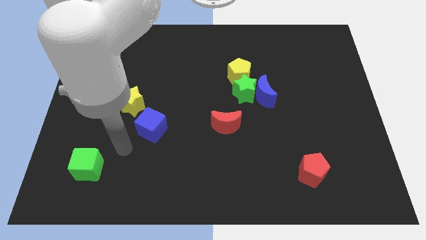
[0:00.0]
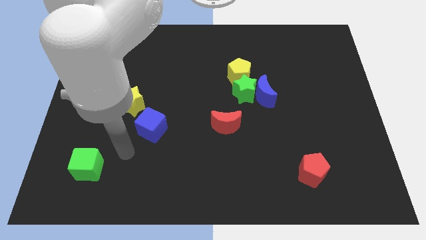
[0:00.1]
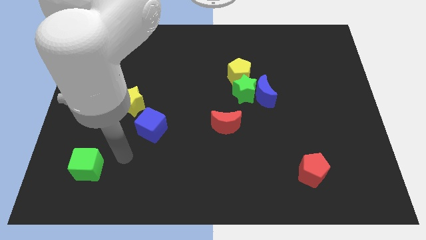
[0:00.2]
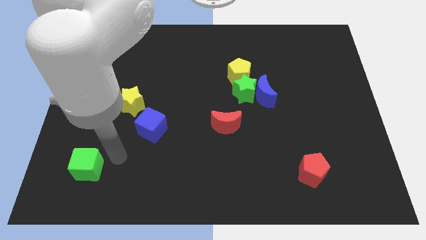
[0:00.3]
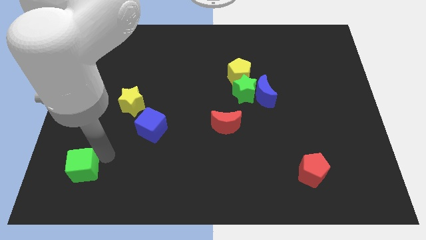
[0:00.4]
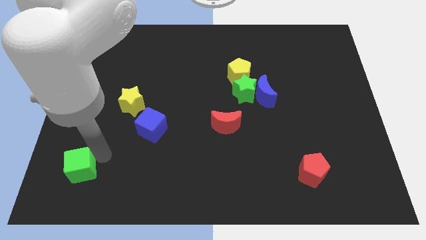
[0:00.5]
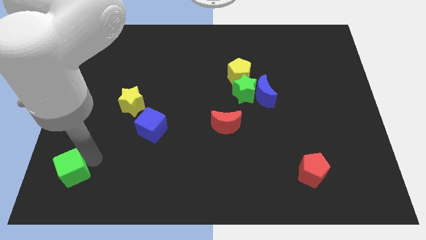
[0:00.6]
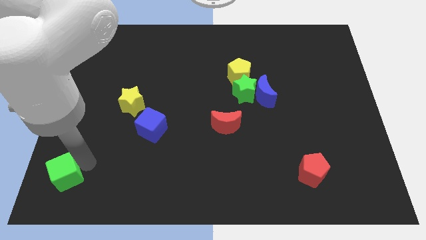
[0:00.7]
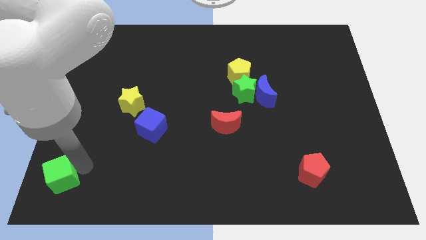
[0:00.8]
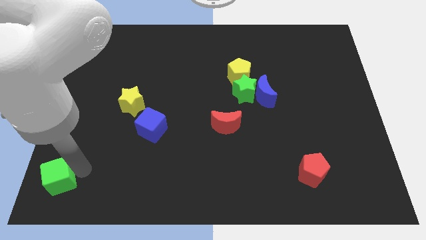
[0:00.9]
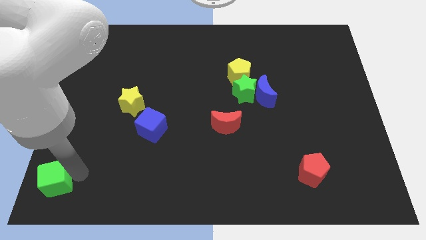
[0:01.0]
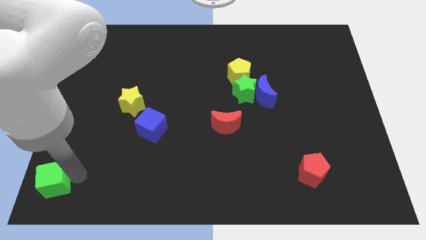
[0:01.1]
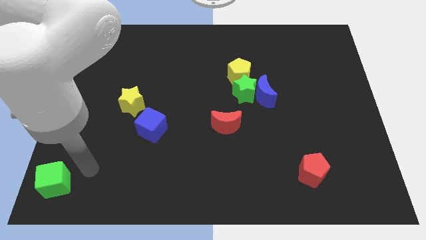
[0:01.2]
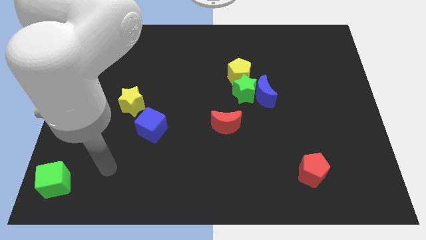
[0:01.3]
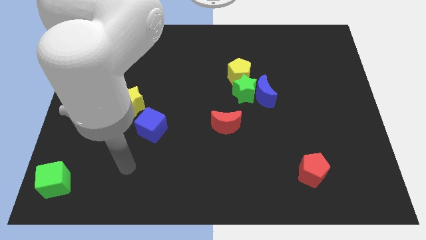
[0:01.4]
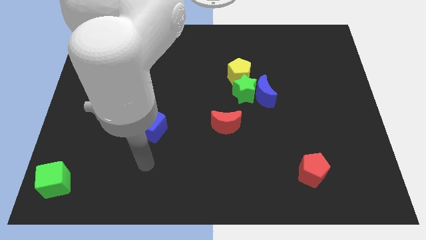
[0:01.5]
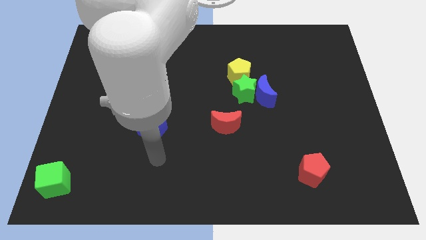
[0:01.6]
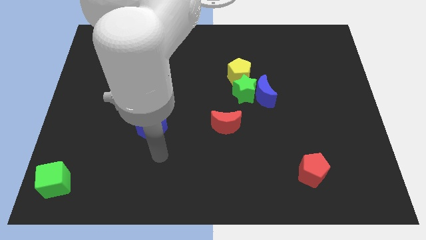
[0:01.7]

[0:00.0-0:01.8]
push the green cube to the bottom left of the board

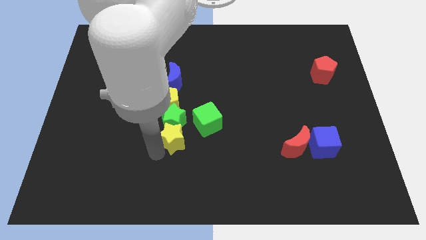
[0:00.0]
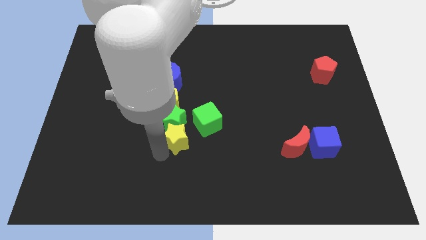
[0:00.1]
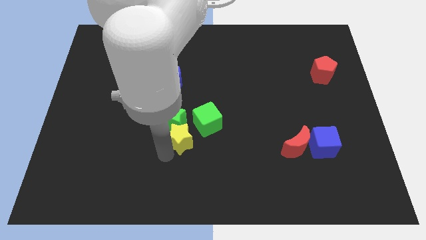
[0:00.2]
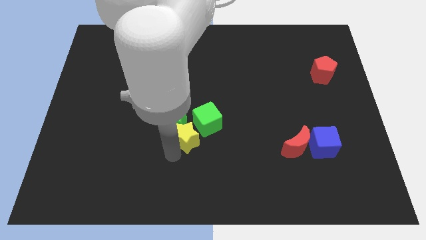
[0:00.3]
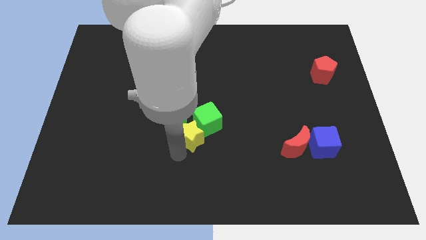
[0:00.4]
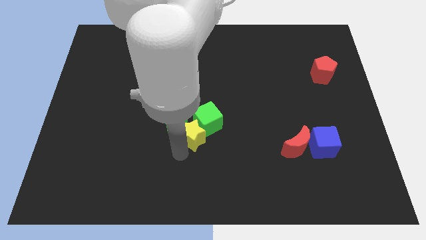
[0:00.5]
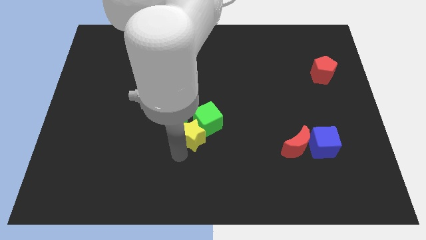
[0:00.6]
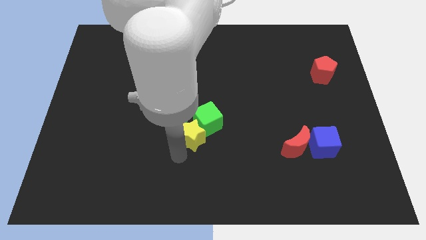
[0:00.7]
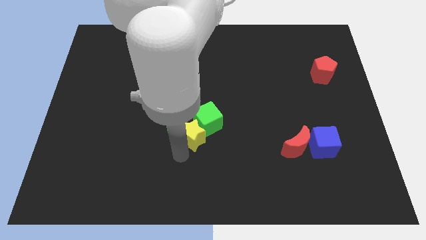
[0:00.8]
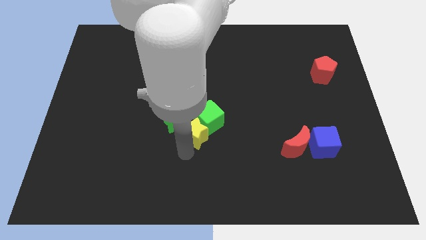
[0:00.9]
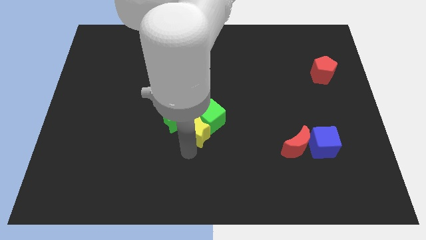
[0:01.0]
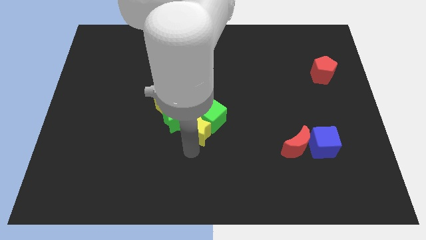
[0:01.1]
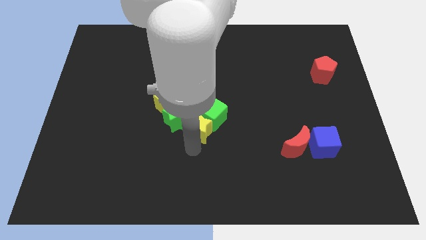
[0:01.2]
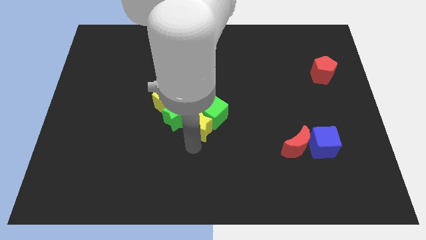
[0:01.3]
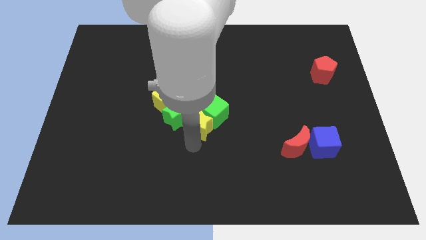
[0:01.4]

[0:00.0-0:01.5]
push the yellow star into the green cube

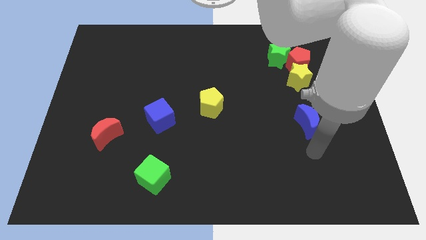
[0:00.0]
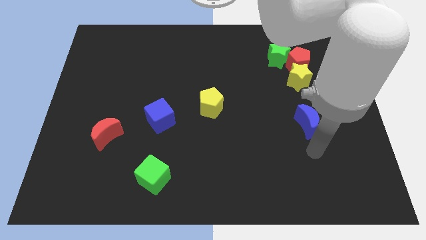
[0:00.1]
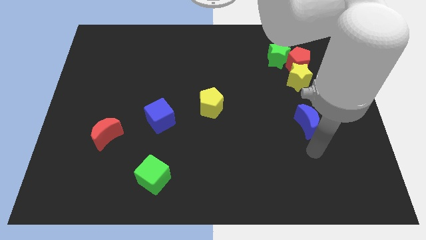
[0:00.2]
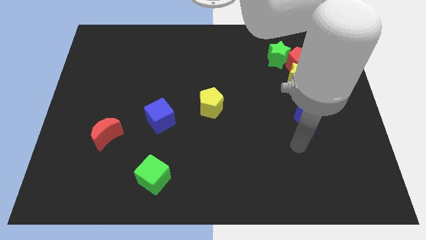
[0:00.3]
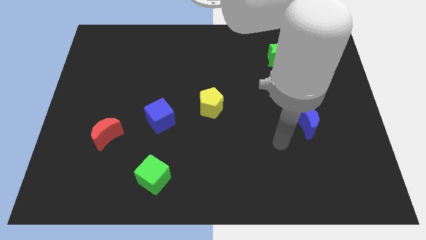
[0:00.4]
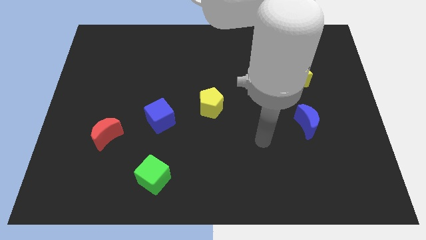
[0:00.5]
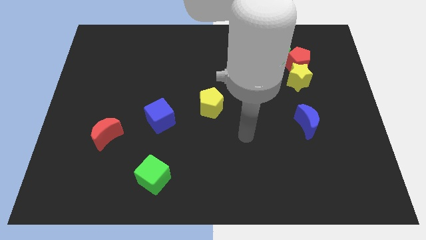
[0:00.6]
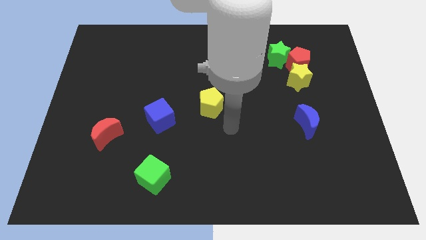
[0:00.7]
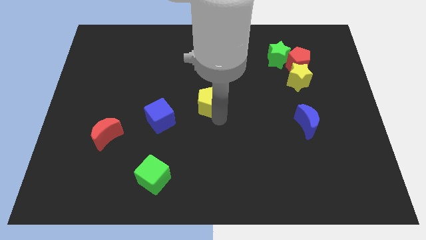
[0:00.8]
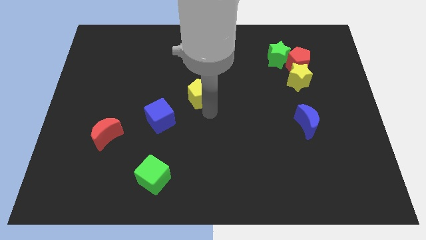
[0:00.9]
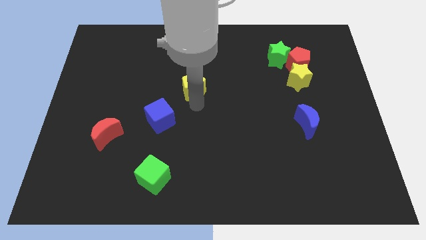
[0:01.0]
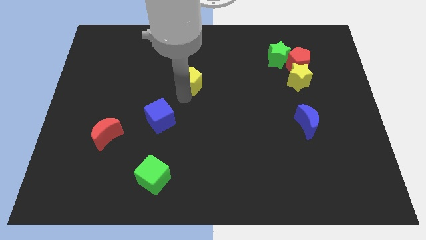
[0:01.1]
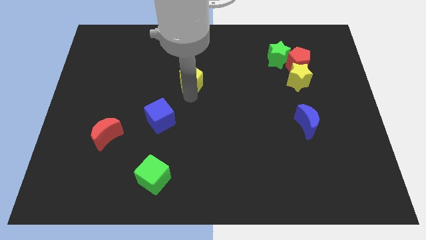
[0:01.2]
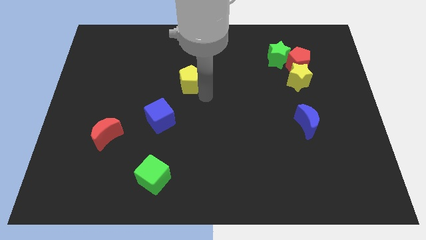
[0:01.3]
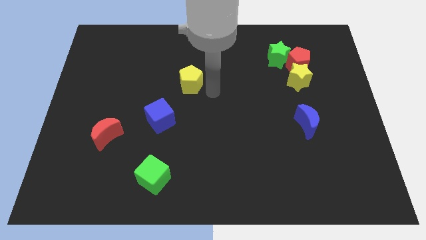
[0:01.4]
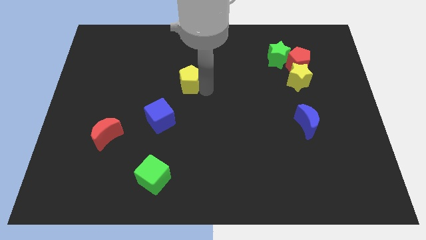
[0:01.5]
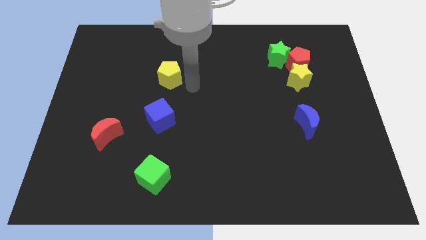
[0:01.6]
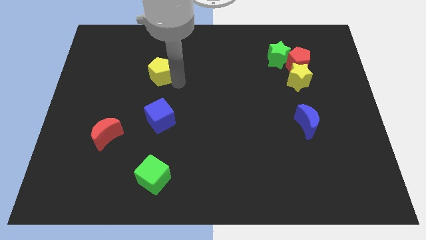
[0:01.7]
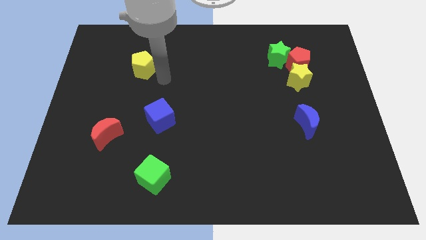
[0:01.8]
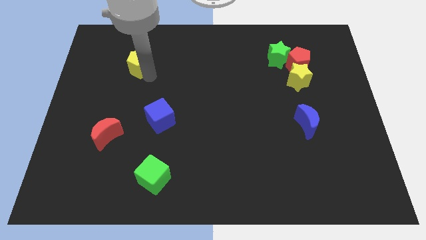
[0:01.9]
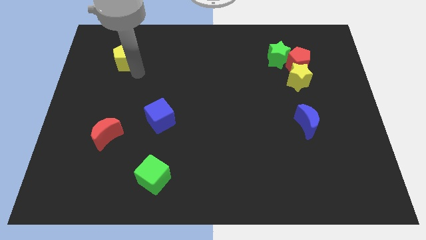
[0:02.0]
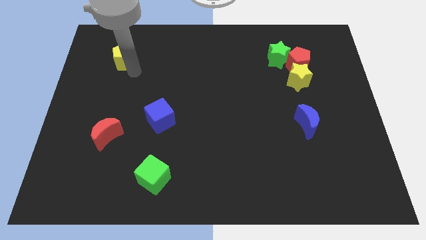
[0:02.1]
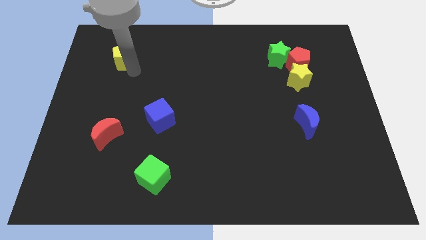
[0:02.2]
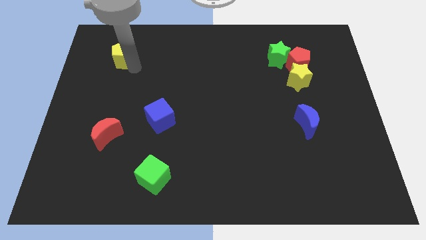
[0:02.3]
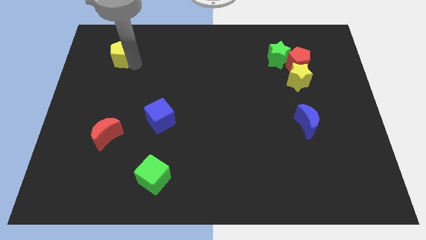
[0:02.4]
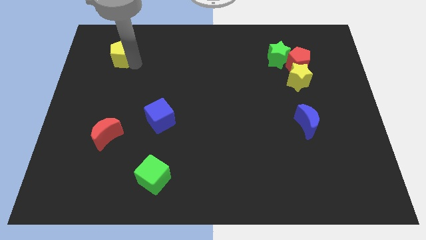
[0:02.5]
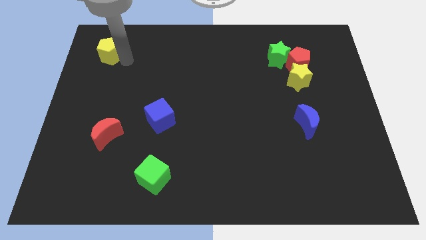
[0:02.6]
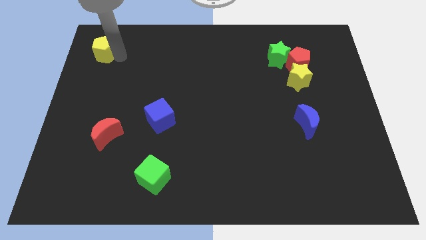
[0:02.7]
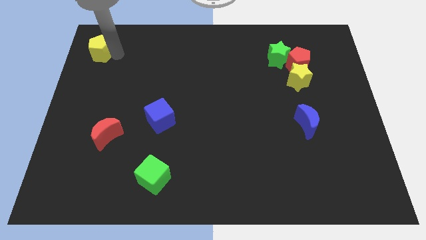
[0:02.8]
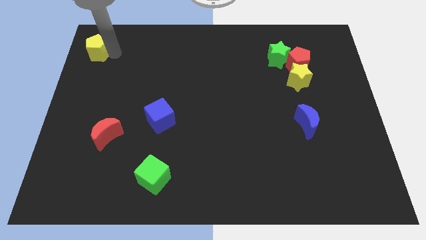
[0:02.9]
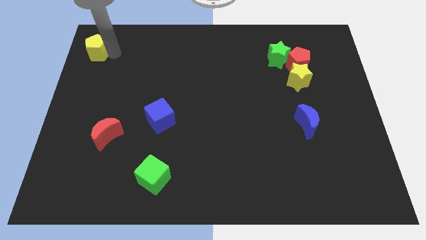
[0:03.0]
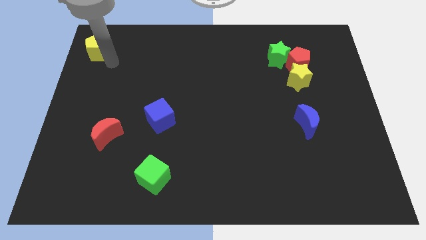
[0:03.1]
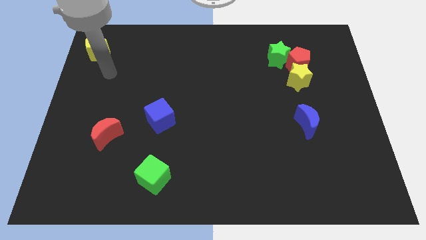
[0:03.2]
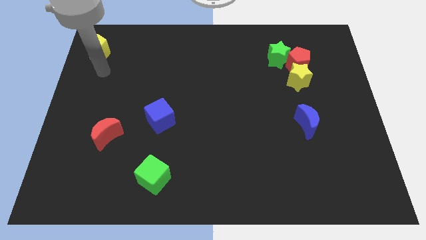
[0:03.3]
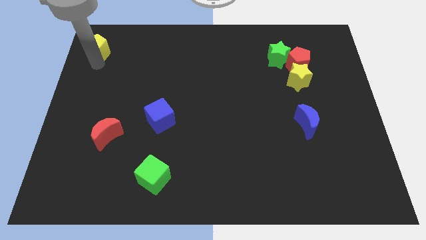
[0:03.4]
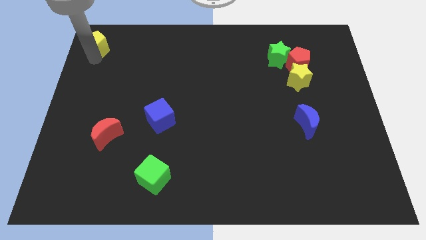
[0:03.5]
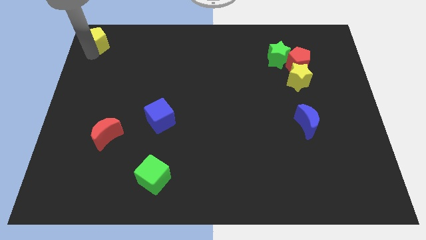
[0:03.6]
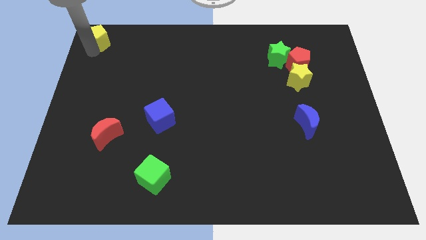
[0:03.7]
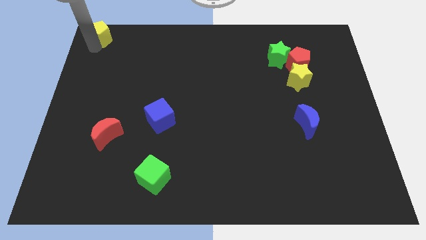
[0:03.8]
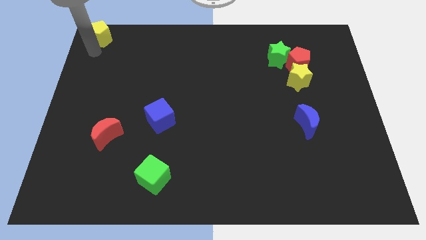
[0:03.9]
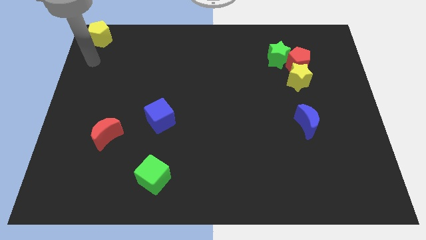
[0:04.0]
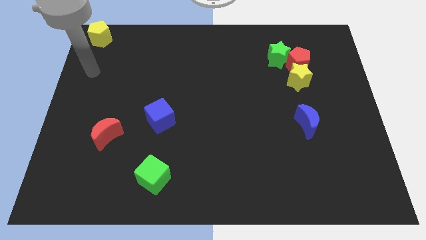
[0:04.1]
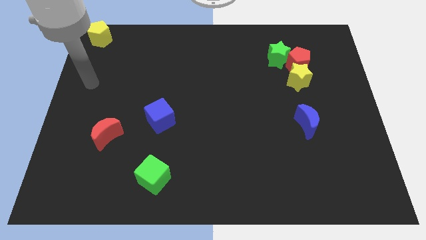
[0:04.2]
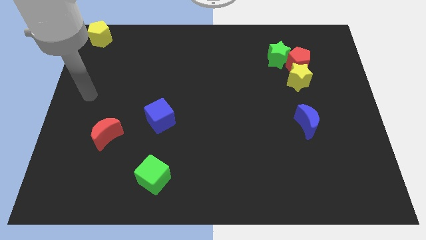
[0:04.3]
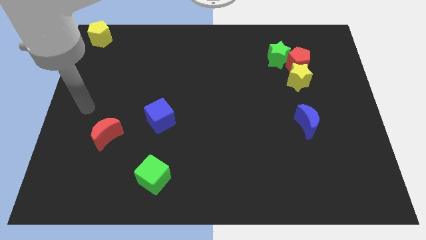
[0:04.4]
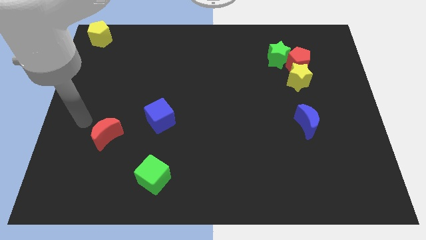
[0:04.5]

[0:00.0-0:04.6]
move the yellow pentagon to the top left

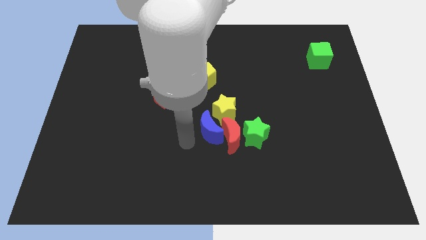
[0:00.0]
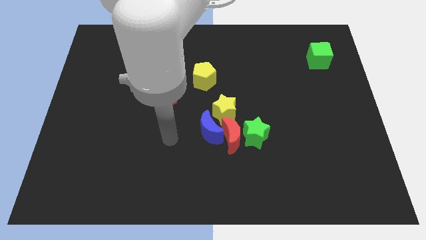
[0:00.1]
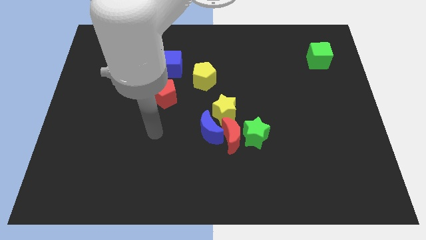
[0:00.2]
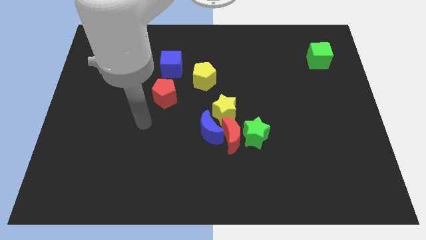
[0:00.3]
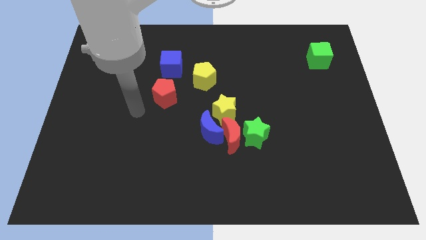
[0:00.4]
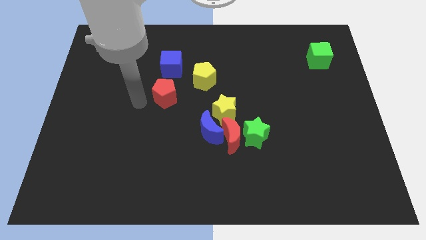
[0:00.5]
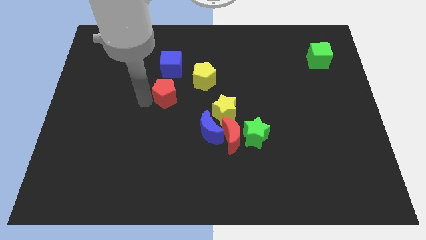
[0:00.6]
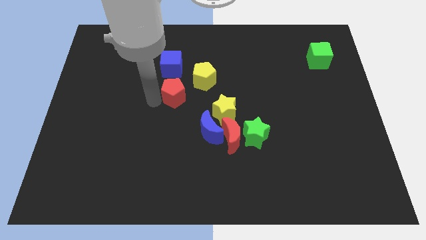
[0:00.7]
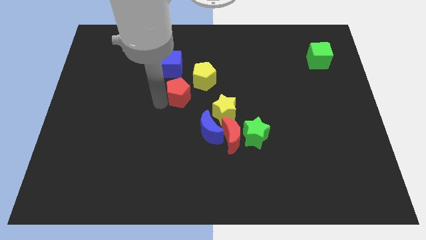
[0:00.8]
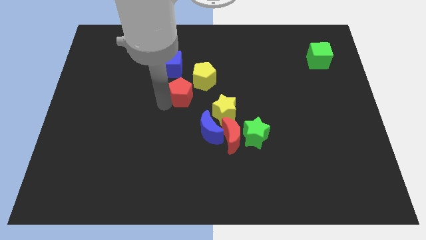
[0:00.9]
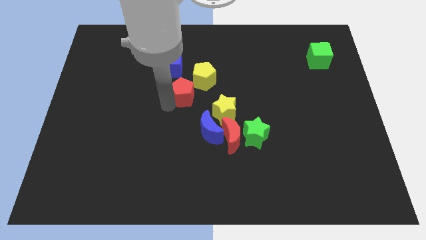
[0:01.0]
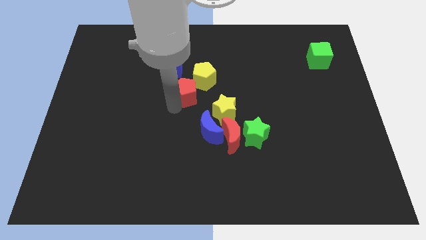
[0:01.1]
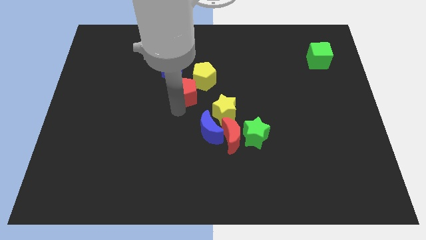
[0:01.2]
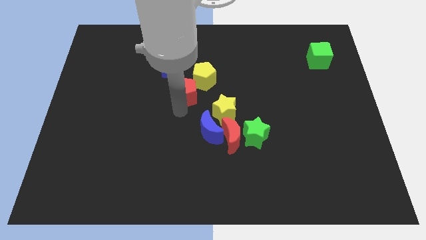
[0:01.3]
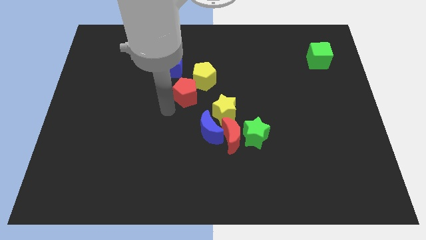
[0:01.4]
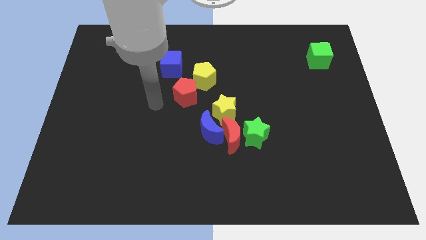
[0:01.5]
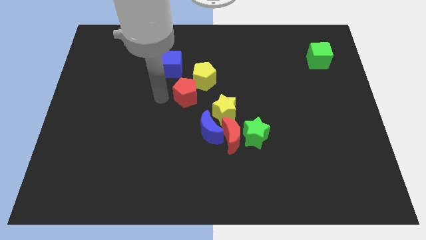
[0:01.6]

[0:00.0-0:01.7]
place red pentagon to the bottom right of blue cube
